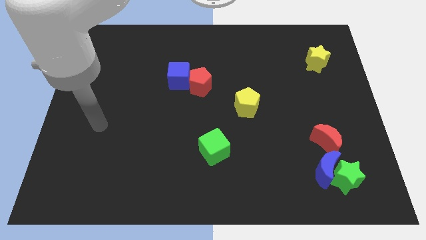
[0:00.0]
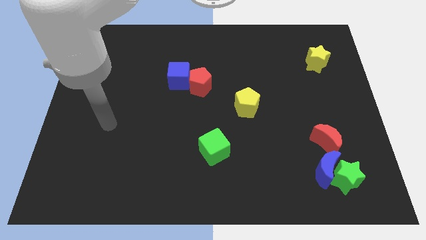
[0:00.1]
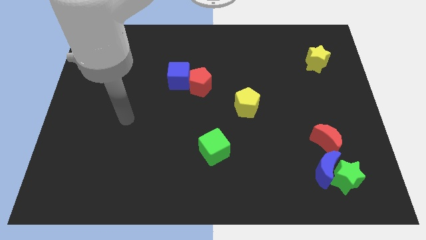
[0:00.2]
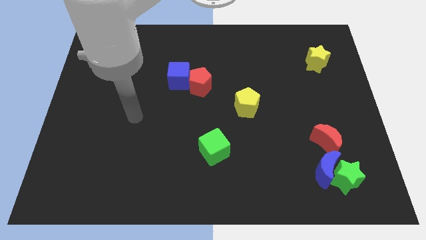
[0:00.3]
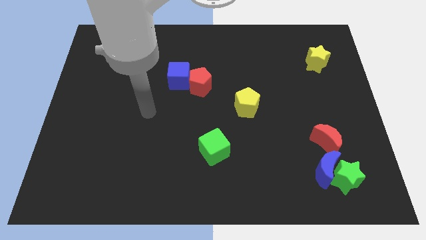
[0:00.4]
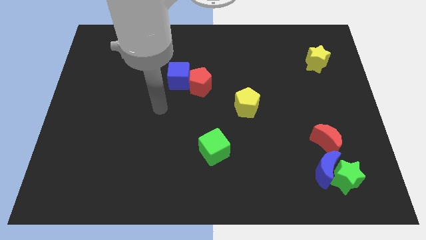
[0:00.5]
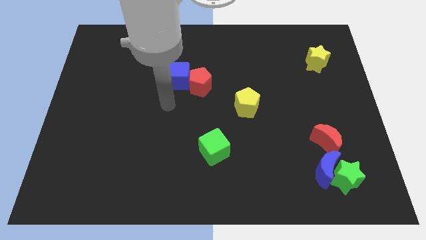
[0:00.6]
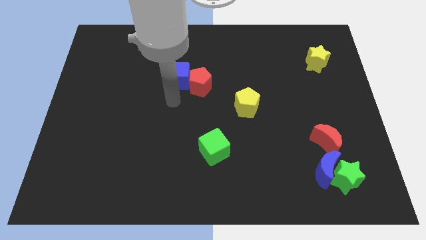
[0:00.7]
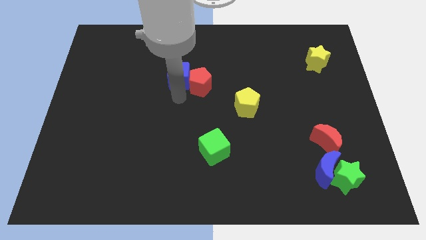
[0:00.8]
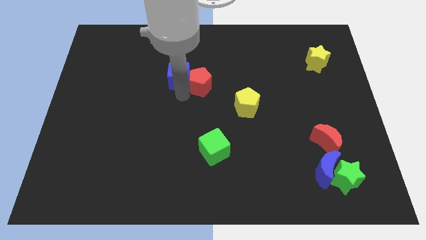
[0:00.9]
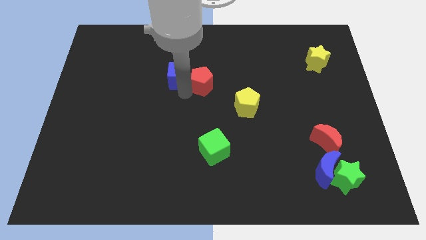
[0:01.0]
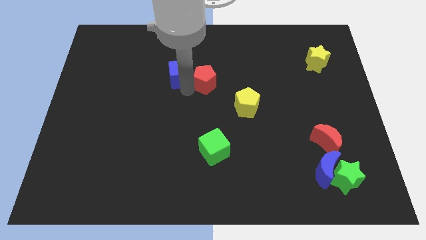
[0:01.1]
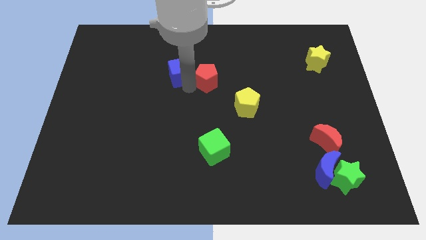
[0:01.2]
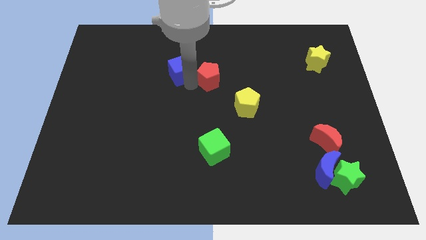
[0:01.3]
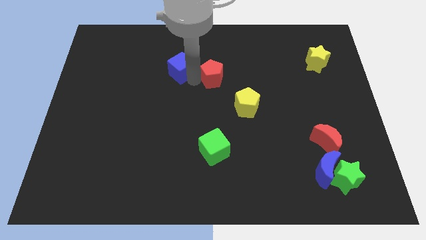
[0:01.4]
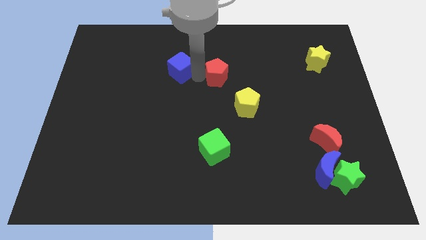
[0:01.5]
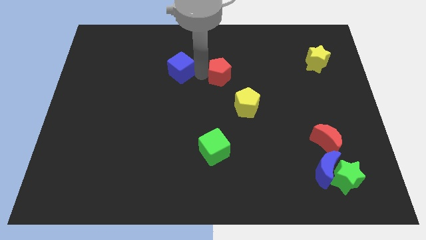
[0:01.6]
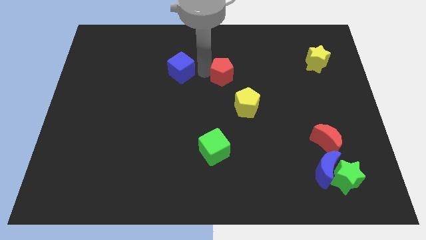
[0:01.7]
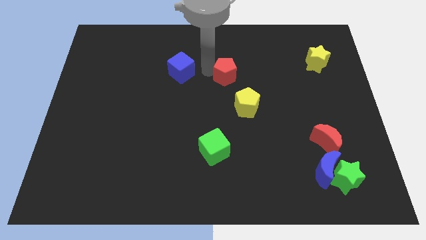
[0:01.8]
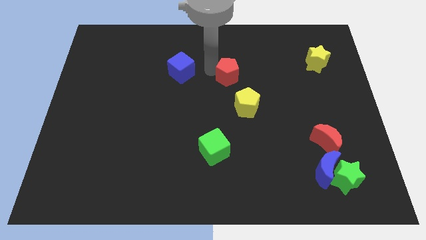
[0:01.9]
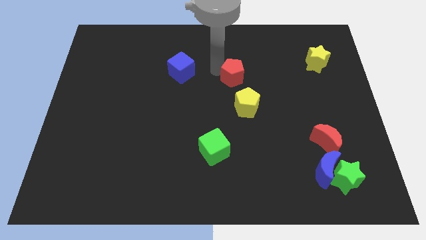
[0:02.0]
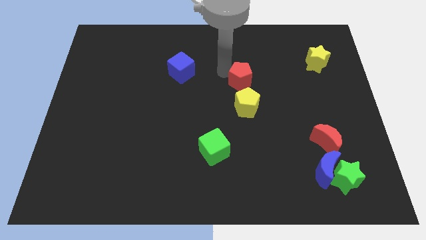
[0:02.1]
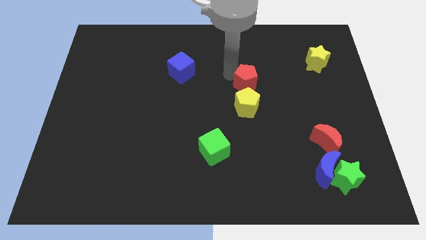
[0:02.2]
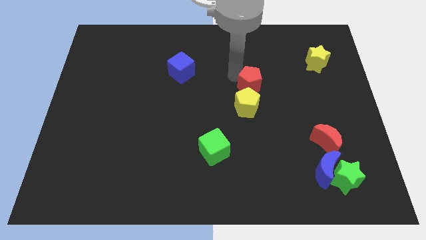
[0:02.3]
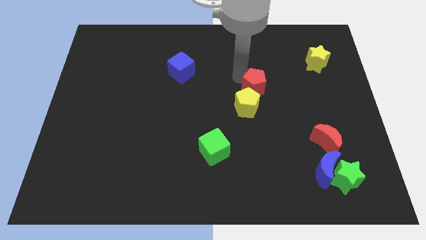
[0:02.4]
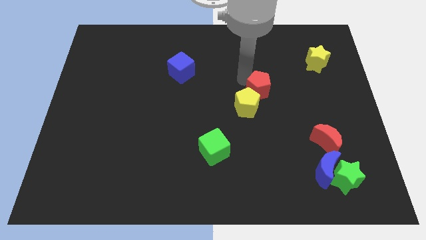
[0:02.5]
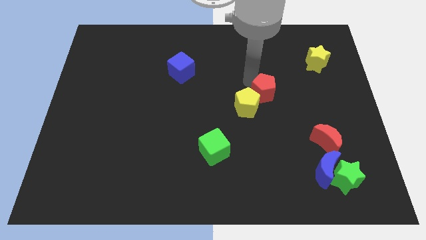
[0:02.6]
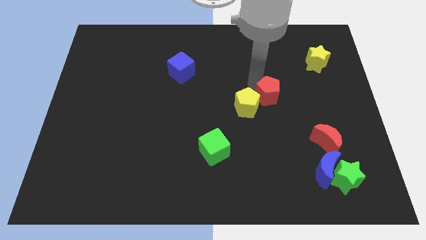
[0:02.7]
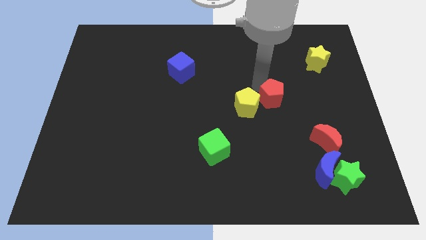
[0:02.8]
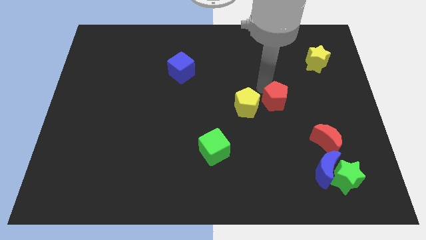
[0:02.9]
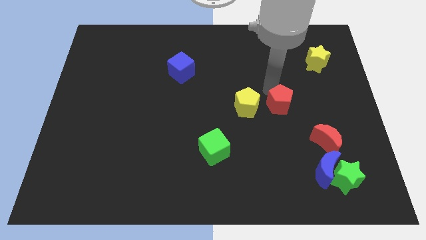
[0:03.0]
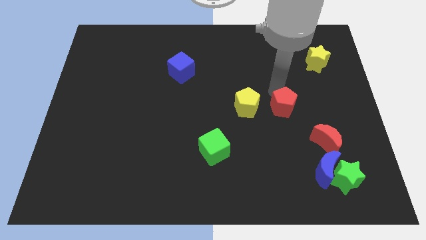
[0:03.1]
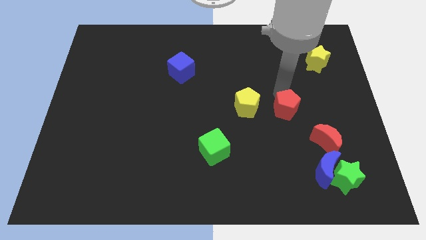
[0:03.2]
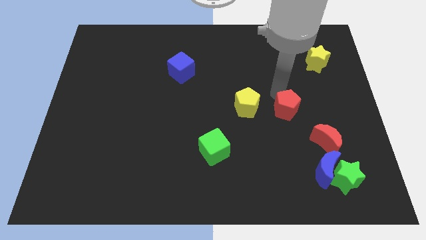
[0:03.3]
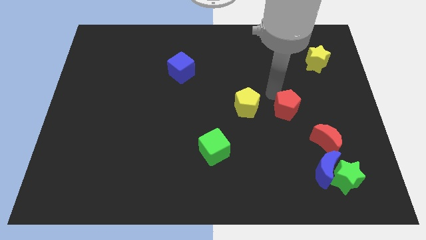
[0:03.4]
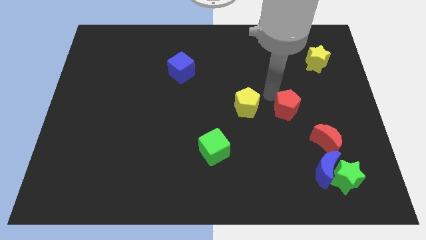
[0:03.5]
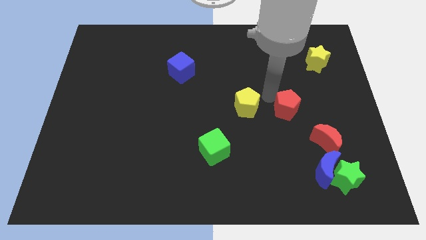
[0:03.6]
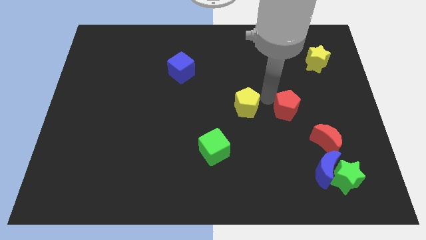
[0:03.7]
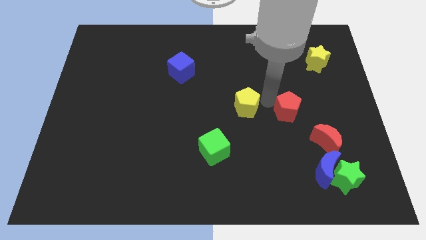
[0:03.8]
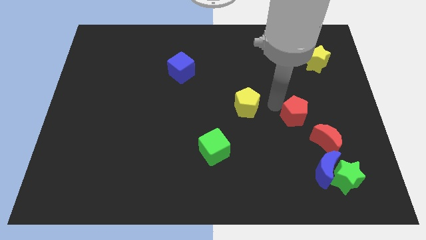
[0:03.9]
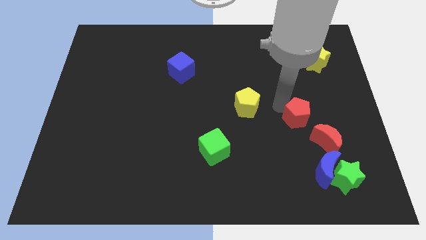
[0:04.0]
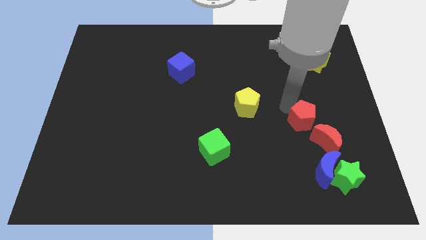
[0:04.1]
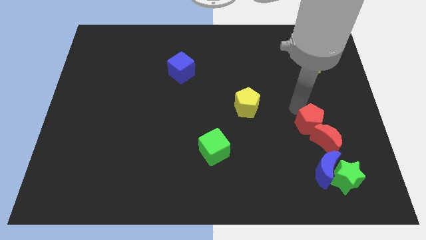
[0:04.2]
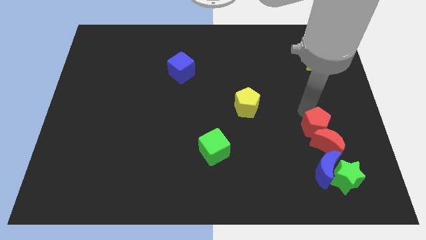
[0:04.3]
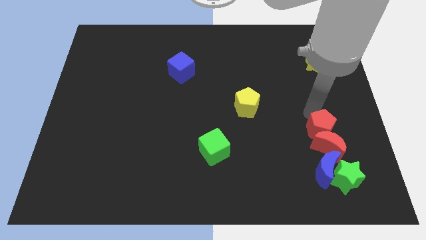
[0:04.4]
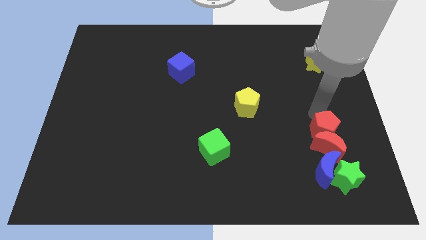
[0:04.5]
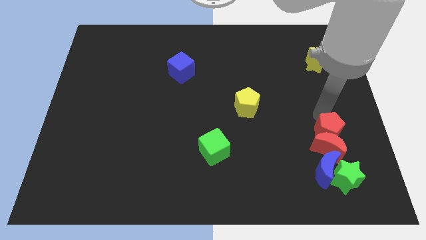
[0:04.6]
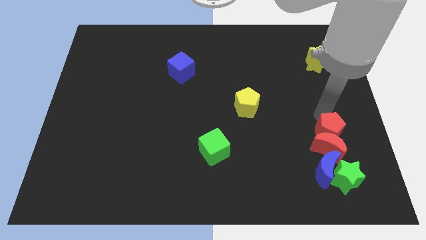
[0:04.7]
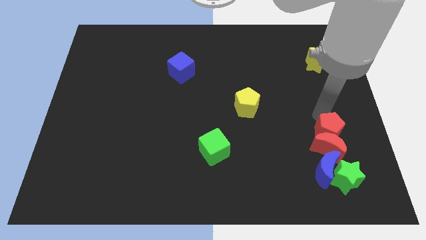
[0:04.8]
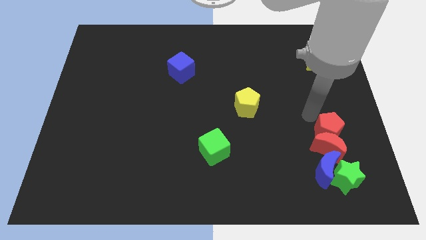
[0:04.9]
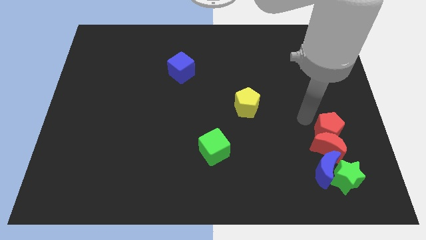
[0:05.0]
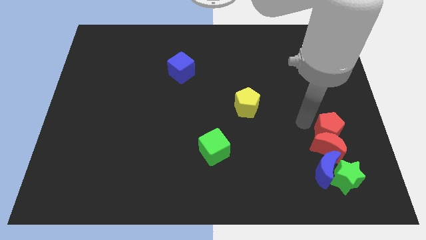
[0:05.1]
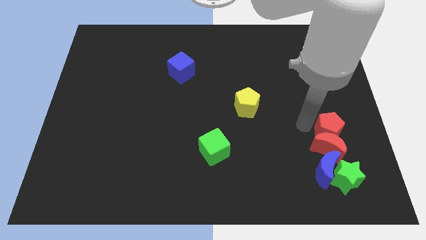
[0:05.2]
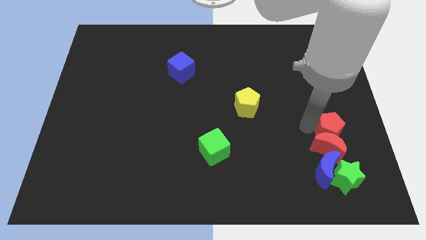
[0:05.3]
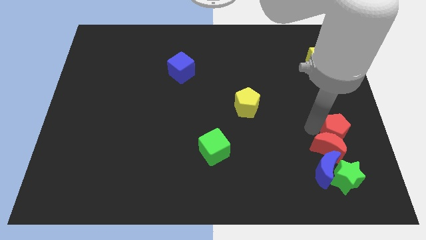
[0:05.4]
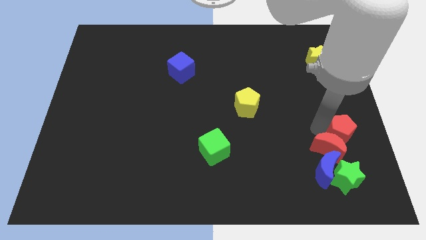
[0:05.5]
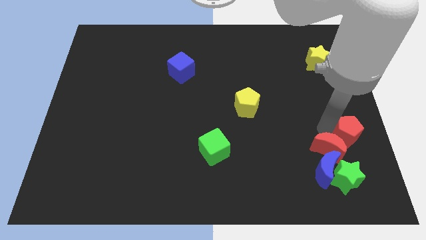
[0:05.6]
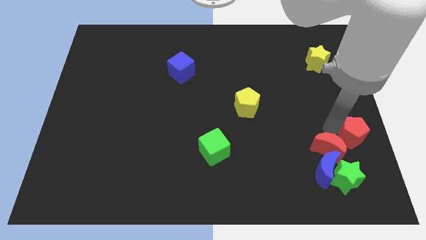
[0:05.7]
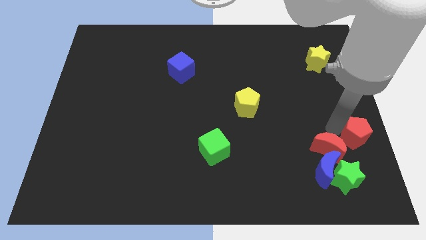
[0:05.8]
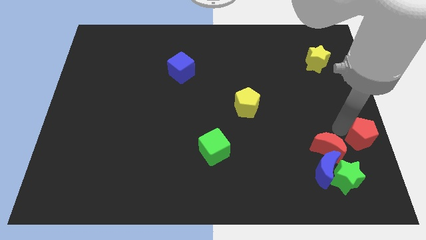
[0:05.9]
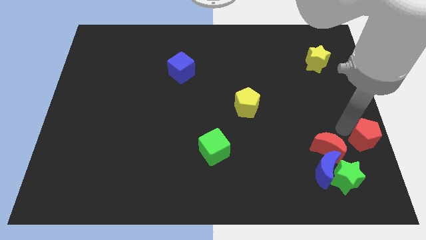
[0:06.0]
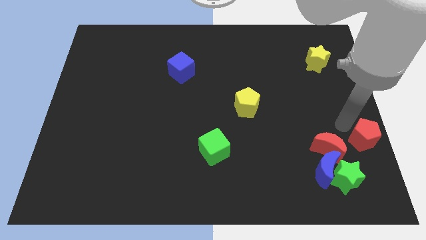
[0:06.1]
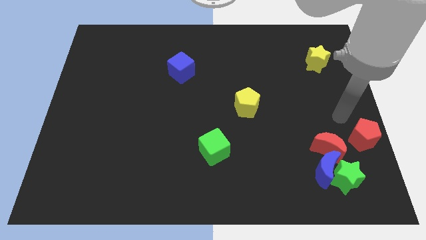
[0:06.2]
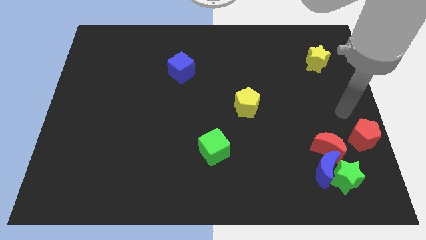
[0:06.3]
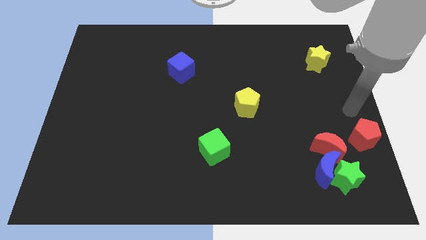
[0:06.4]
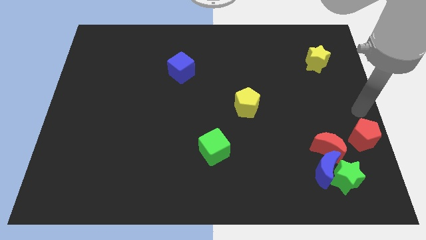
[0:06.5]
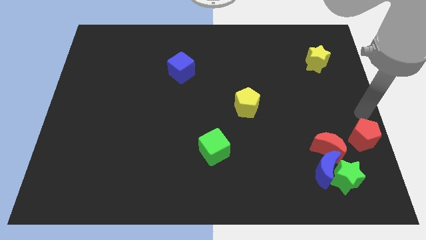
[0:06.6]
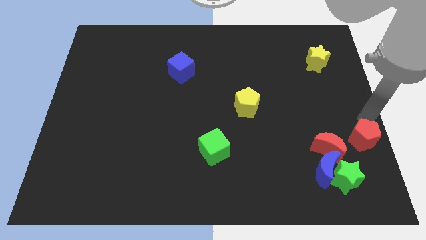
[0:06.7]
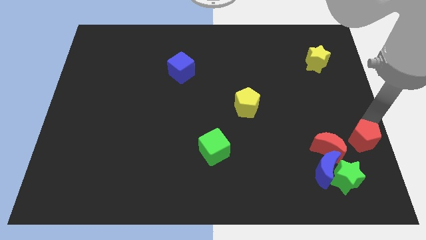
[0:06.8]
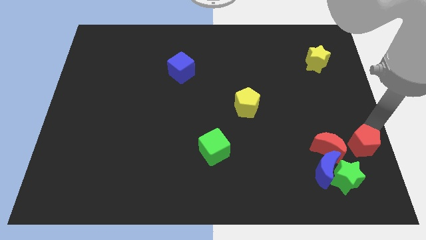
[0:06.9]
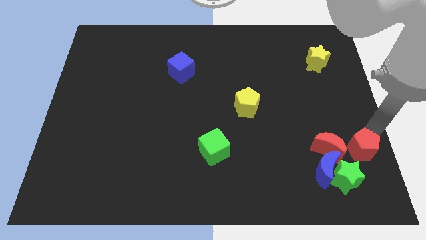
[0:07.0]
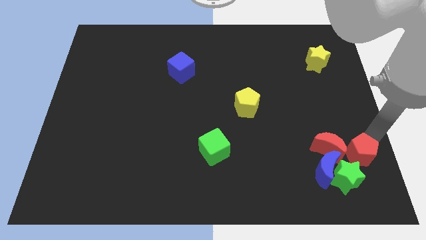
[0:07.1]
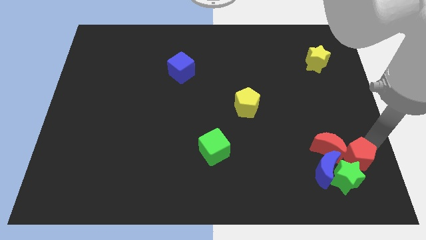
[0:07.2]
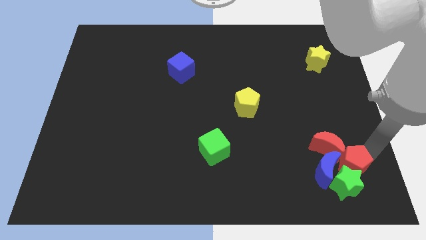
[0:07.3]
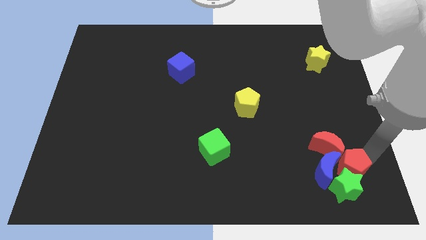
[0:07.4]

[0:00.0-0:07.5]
slide the red pentagon close to the green star

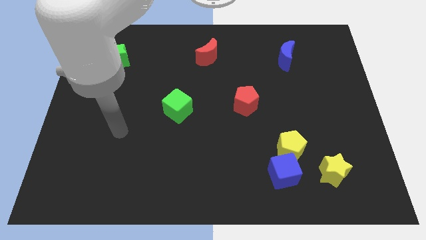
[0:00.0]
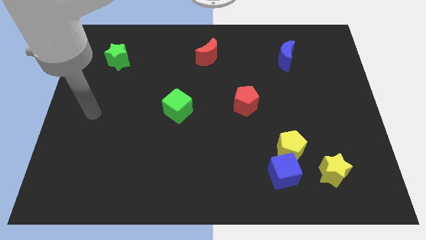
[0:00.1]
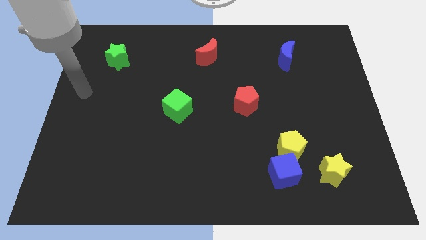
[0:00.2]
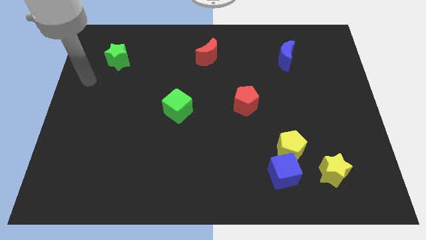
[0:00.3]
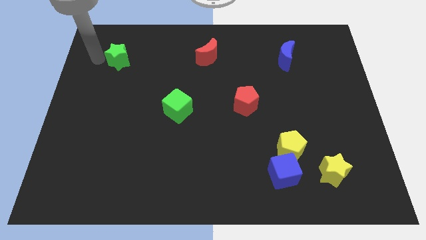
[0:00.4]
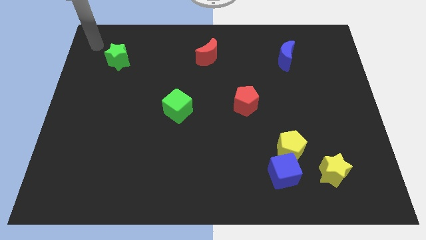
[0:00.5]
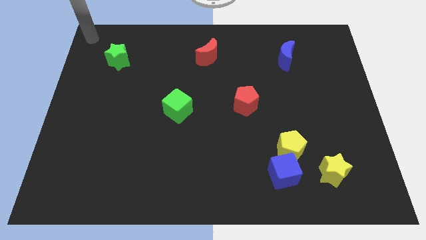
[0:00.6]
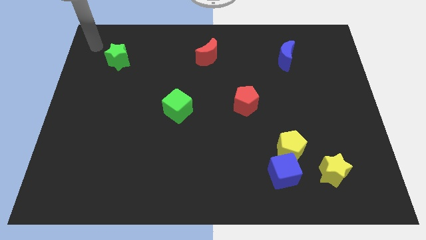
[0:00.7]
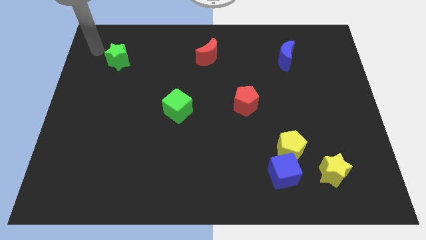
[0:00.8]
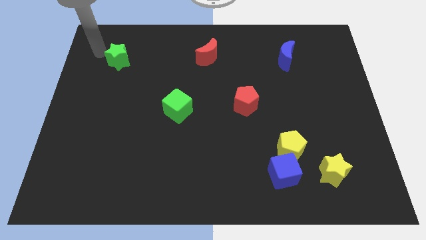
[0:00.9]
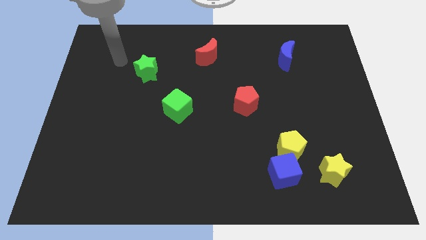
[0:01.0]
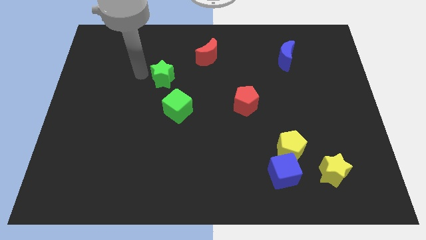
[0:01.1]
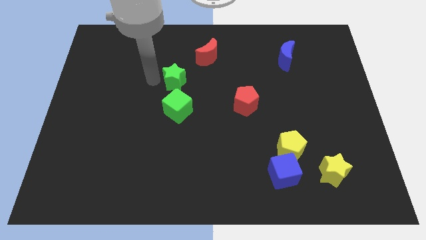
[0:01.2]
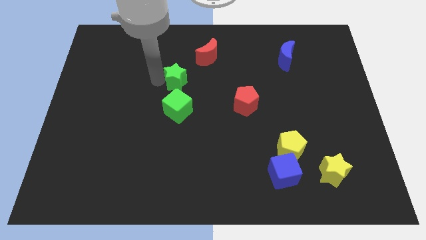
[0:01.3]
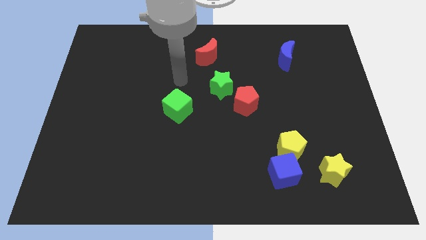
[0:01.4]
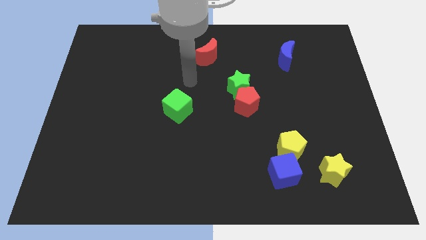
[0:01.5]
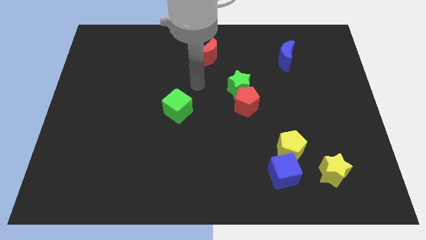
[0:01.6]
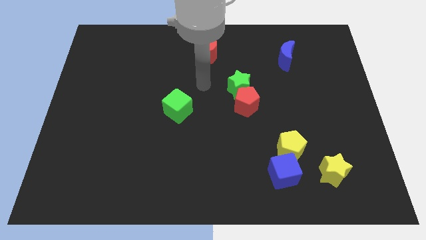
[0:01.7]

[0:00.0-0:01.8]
put the green star next to the red pentagon
